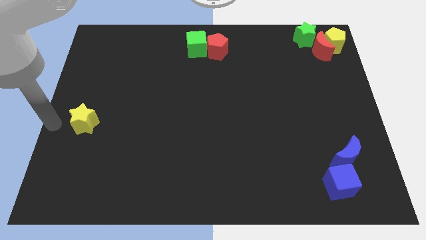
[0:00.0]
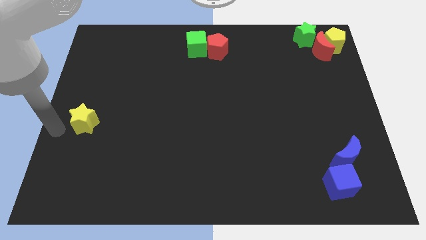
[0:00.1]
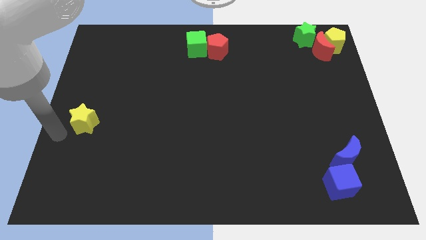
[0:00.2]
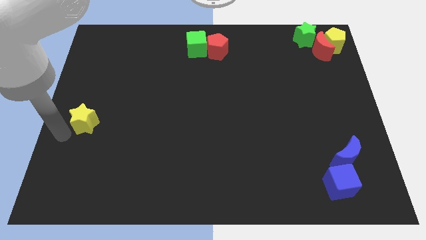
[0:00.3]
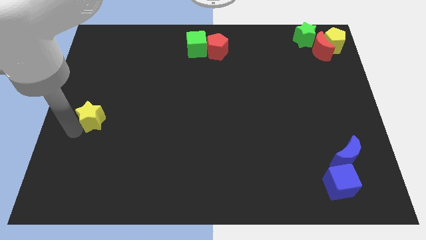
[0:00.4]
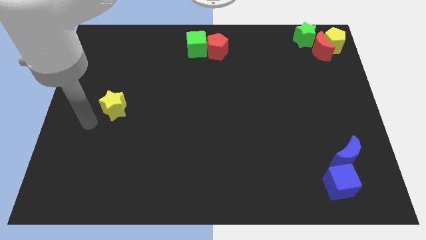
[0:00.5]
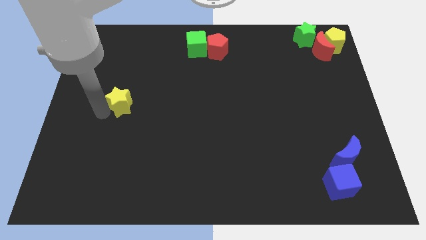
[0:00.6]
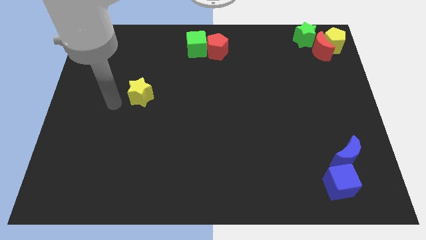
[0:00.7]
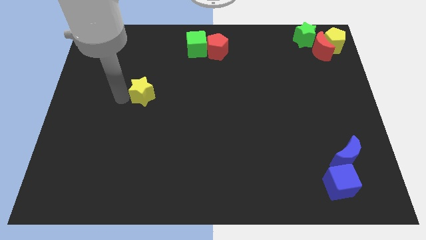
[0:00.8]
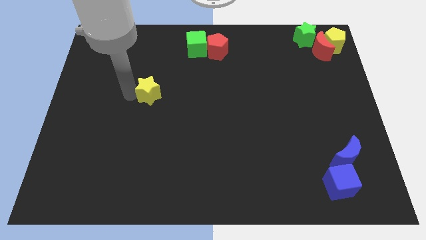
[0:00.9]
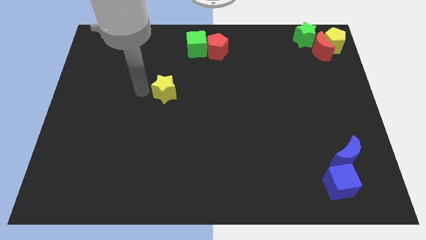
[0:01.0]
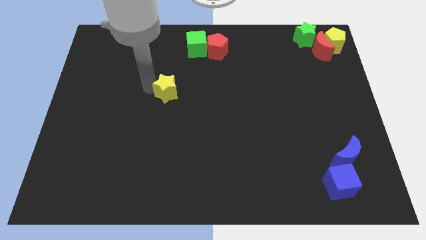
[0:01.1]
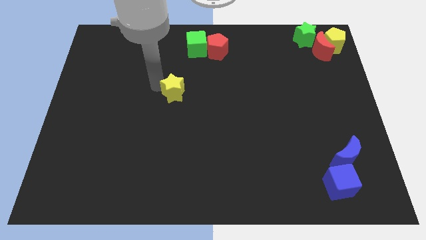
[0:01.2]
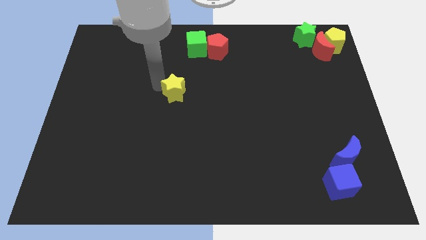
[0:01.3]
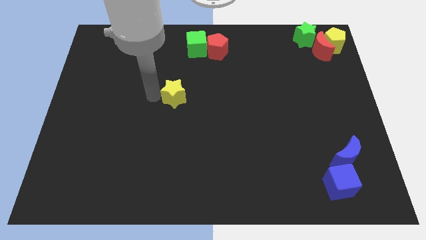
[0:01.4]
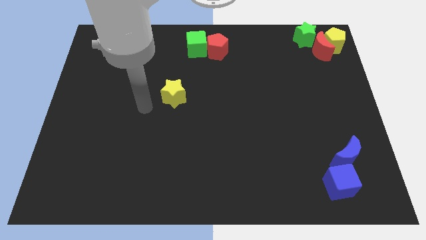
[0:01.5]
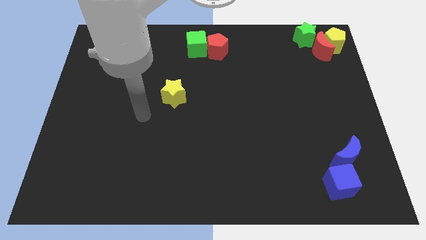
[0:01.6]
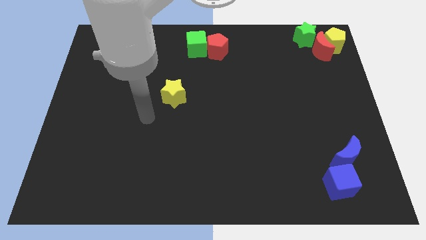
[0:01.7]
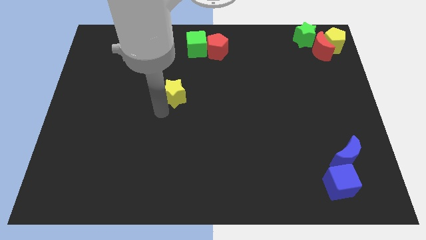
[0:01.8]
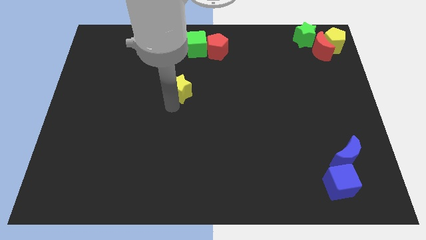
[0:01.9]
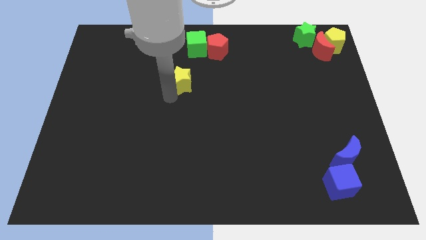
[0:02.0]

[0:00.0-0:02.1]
move the yellow star towards green cube

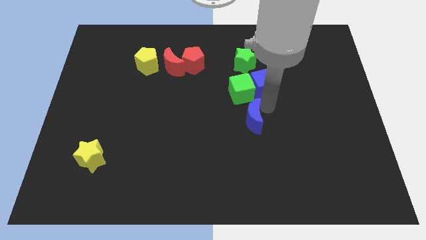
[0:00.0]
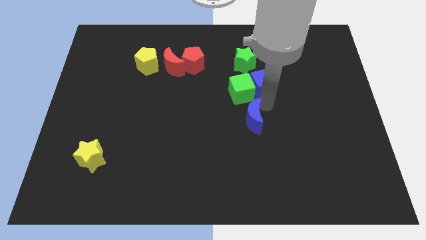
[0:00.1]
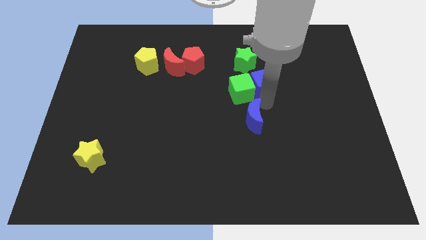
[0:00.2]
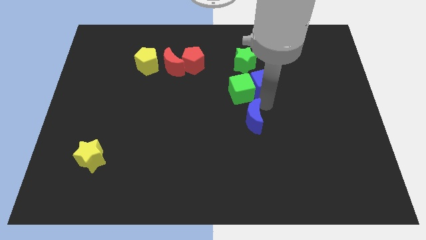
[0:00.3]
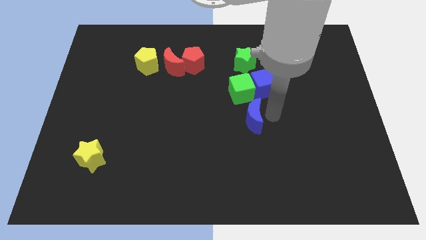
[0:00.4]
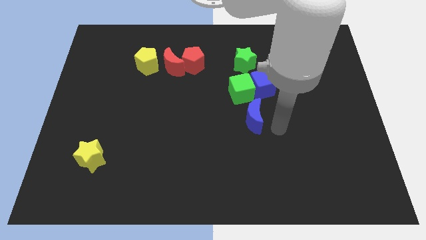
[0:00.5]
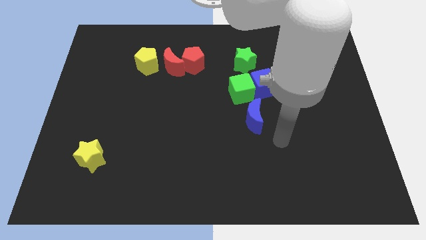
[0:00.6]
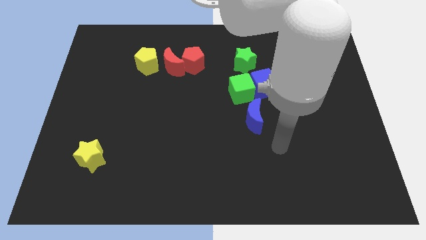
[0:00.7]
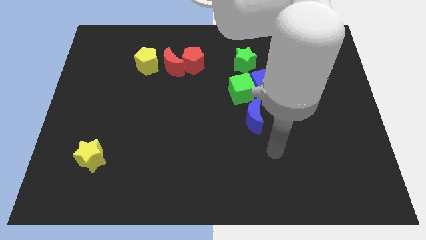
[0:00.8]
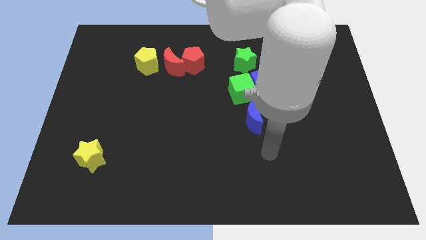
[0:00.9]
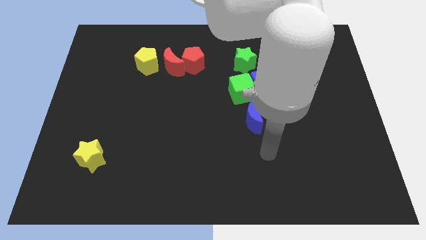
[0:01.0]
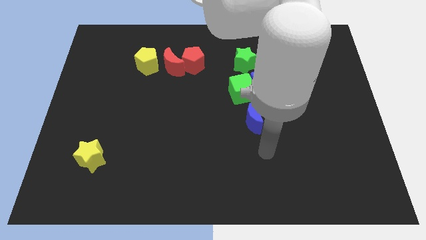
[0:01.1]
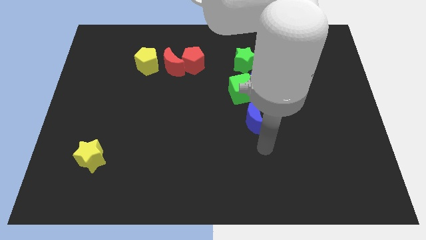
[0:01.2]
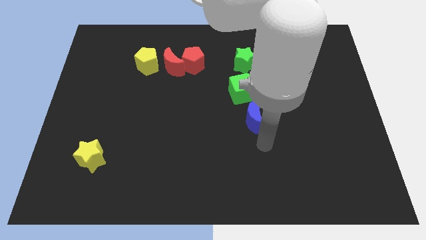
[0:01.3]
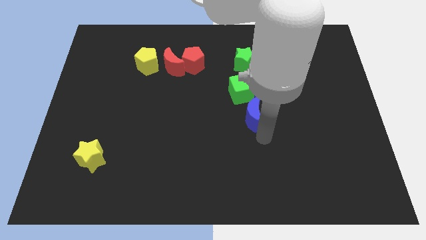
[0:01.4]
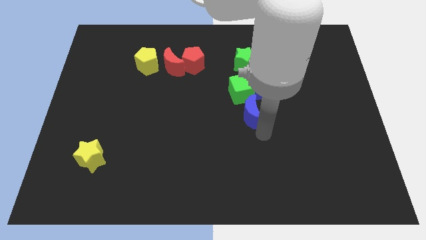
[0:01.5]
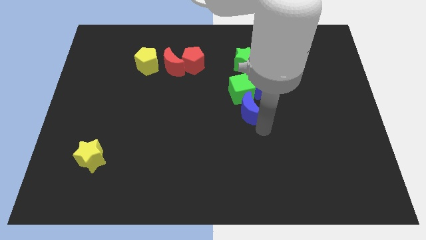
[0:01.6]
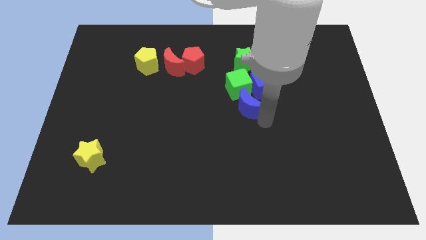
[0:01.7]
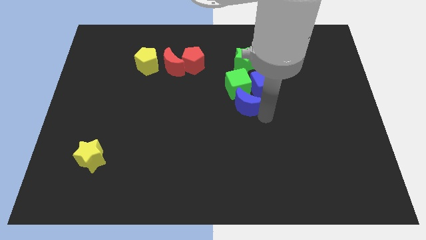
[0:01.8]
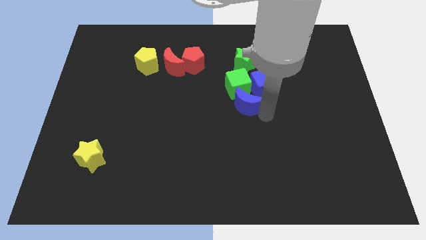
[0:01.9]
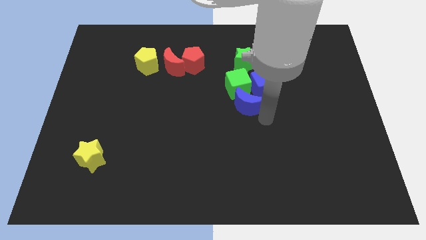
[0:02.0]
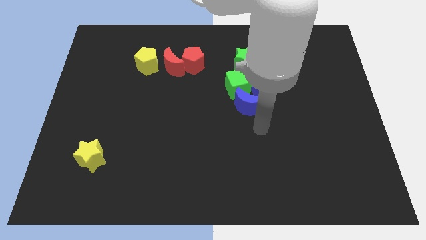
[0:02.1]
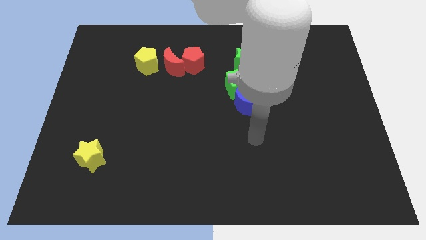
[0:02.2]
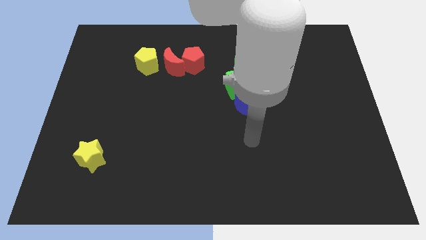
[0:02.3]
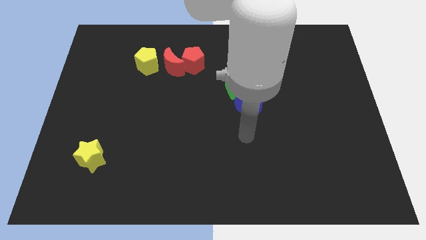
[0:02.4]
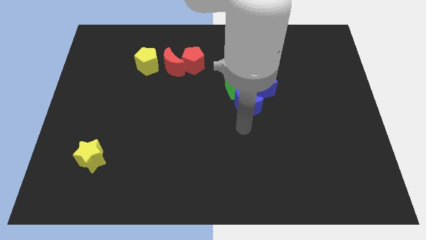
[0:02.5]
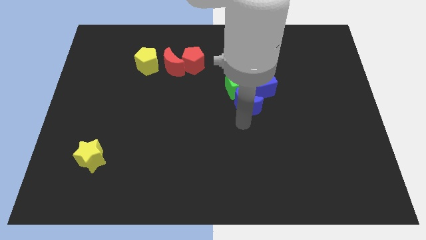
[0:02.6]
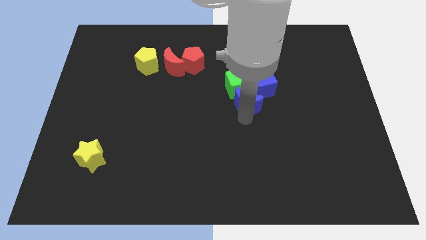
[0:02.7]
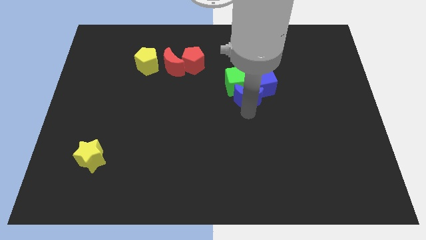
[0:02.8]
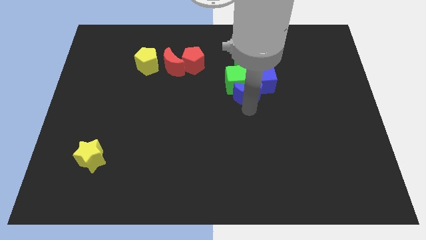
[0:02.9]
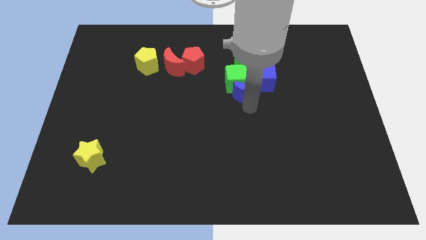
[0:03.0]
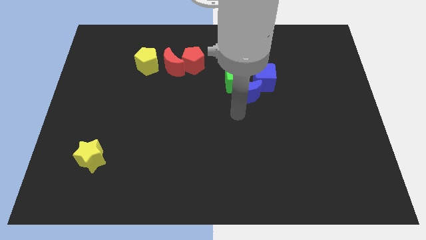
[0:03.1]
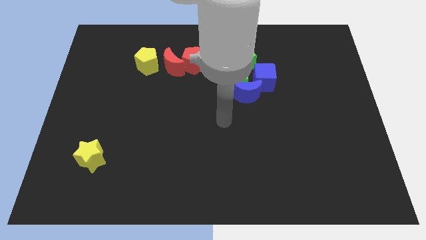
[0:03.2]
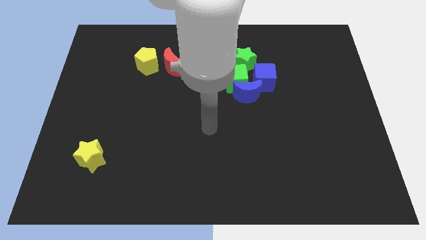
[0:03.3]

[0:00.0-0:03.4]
move the blue moon into green cube and blue cube

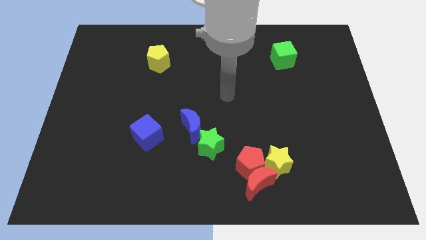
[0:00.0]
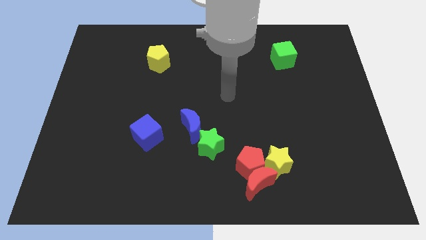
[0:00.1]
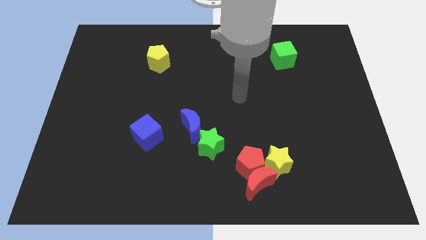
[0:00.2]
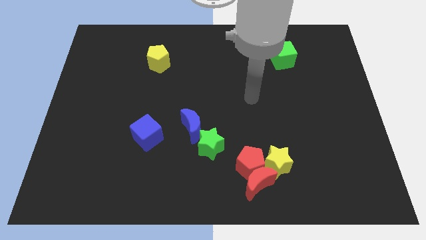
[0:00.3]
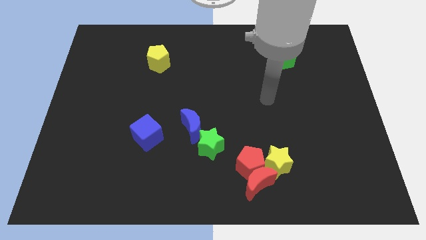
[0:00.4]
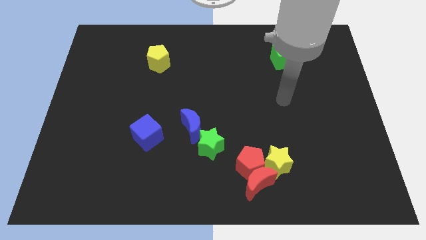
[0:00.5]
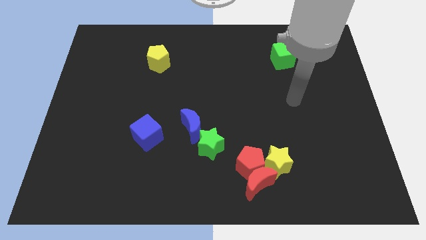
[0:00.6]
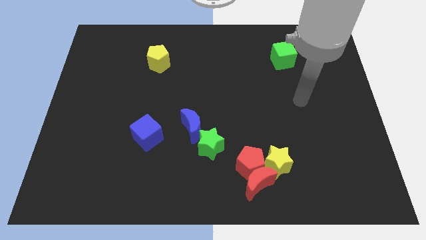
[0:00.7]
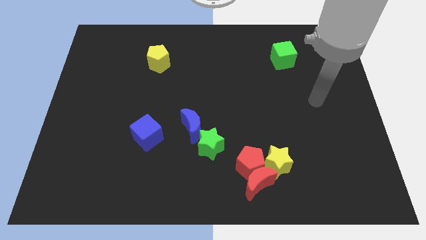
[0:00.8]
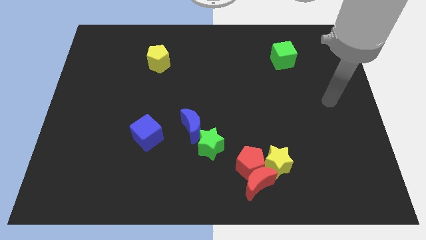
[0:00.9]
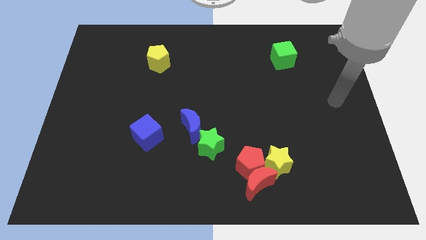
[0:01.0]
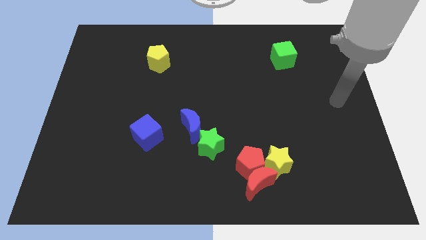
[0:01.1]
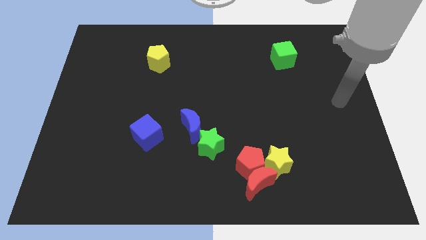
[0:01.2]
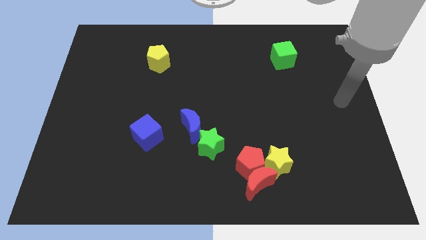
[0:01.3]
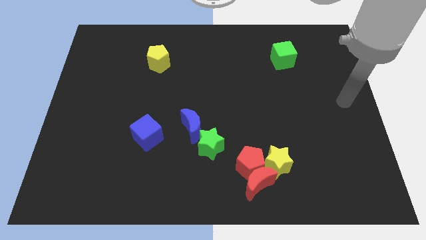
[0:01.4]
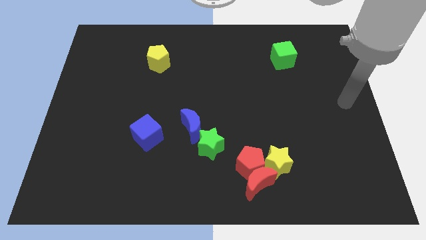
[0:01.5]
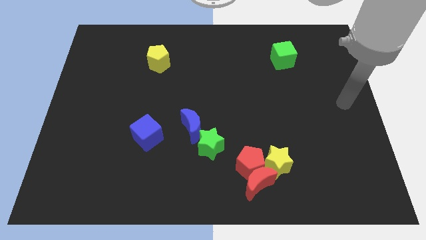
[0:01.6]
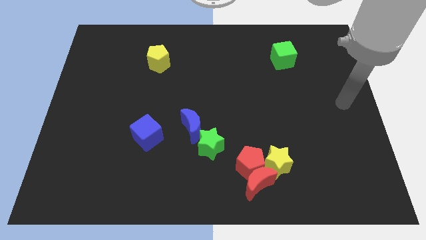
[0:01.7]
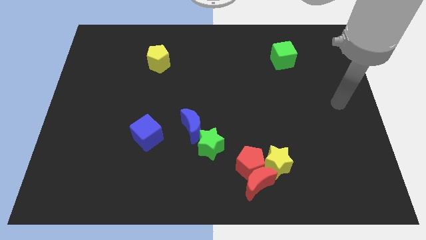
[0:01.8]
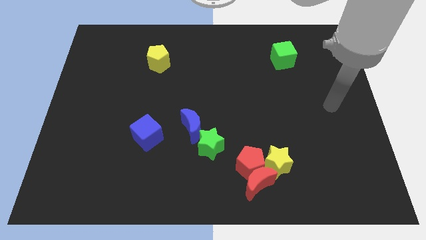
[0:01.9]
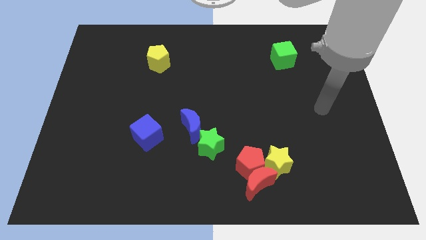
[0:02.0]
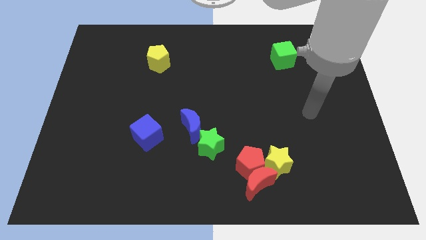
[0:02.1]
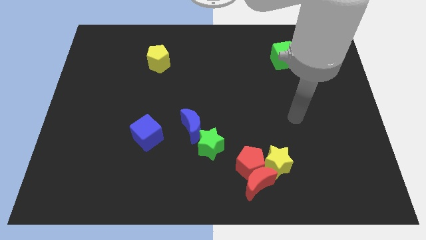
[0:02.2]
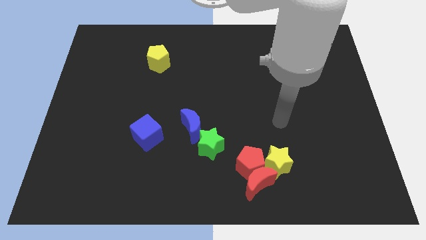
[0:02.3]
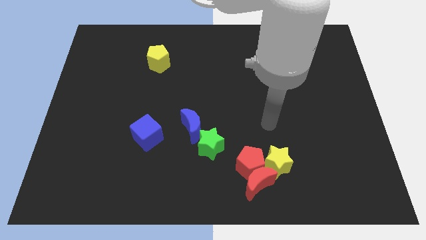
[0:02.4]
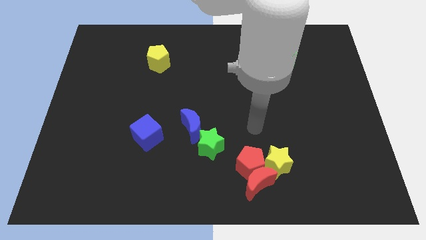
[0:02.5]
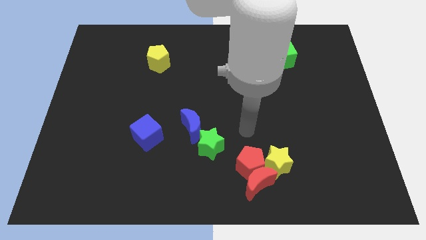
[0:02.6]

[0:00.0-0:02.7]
move your arm towards the green star

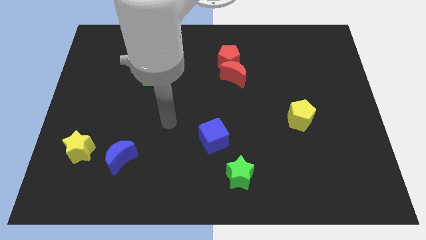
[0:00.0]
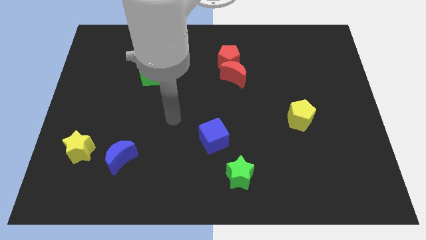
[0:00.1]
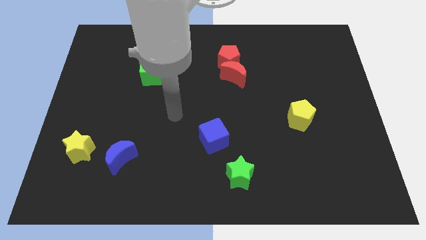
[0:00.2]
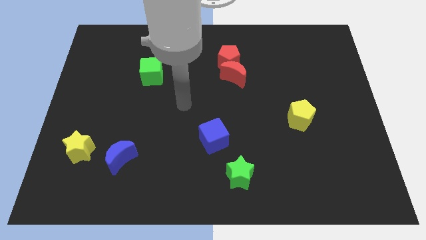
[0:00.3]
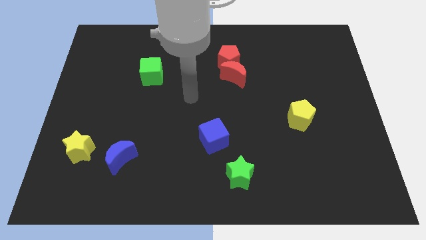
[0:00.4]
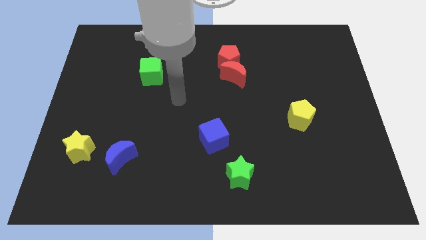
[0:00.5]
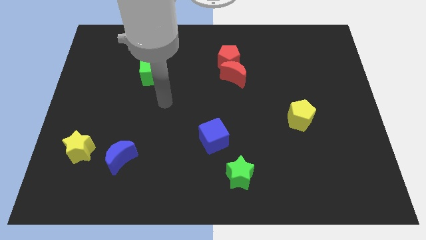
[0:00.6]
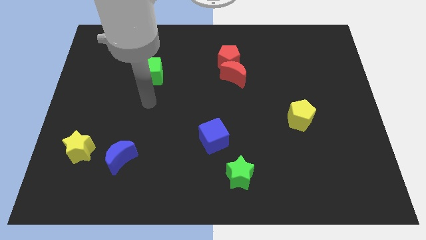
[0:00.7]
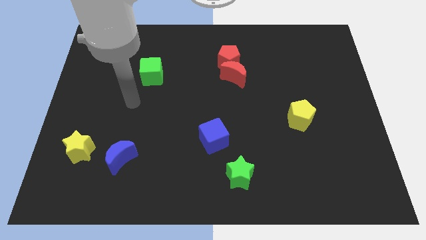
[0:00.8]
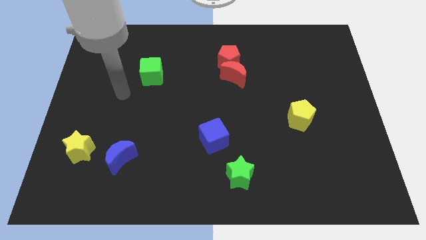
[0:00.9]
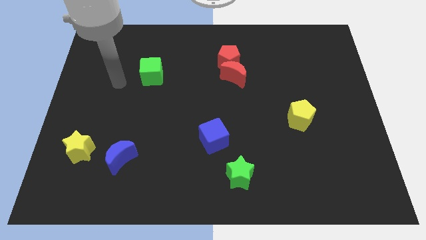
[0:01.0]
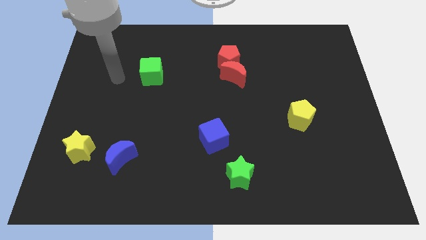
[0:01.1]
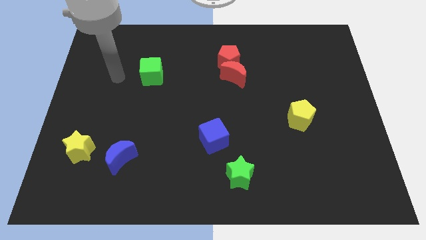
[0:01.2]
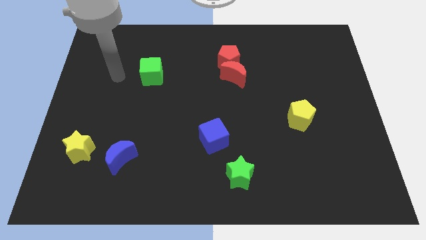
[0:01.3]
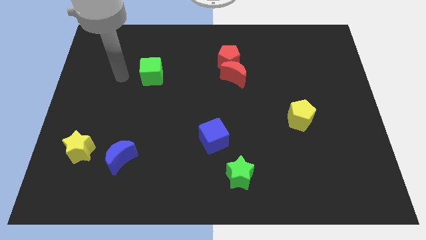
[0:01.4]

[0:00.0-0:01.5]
point the arm to the left of the green cube
